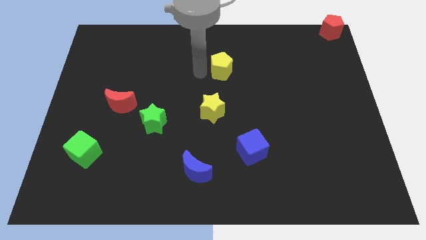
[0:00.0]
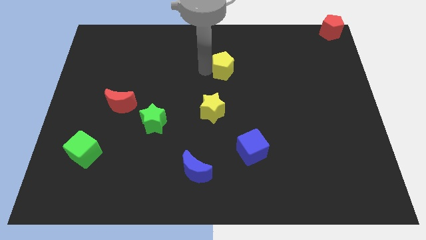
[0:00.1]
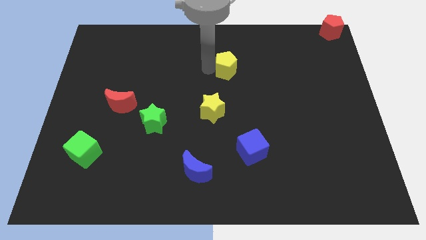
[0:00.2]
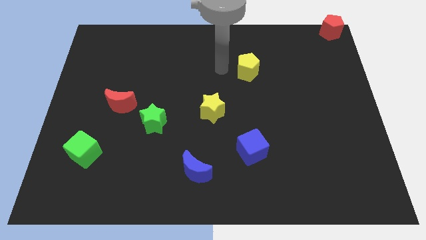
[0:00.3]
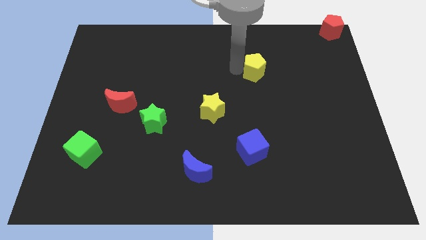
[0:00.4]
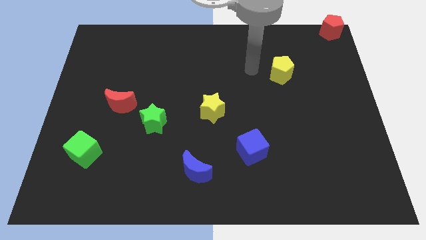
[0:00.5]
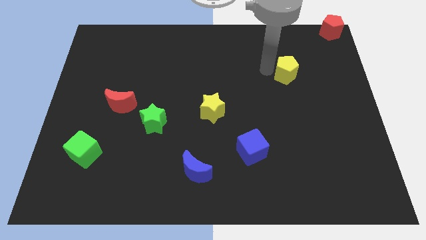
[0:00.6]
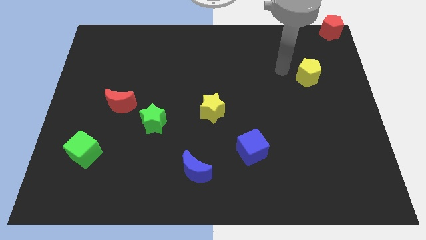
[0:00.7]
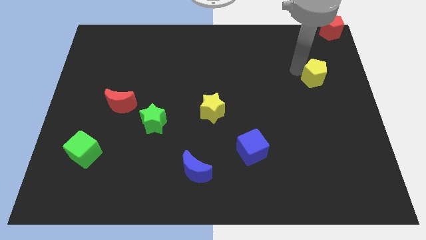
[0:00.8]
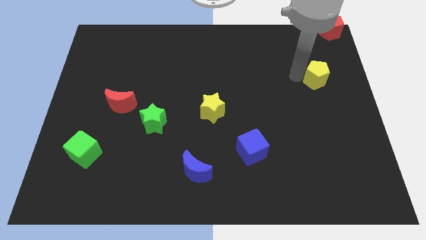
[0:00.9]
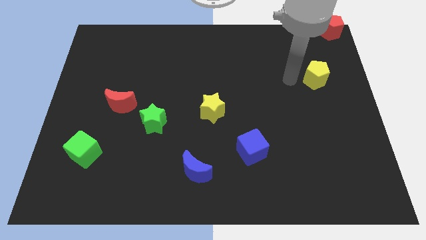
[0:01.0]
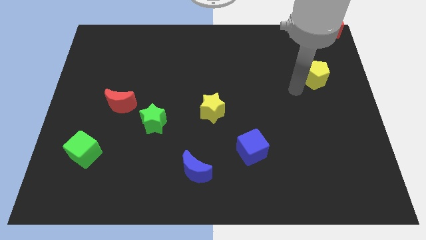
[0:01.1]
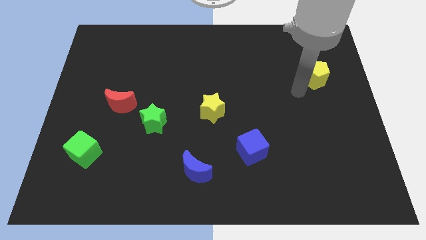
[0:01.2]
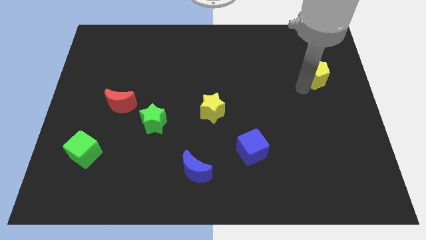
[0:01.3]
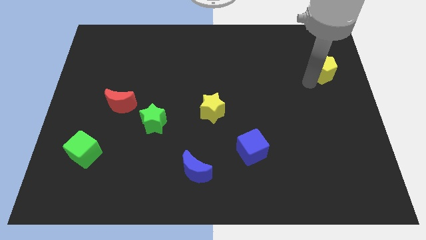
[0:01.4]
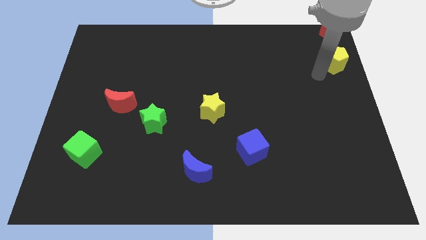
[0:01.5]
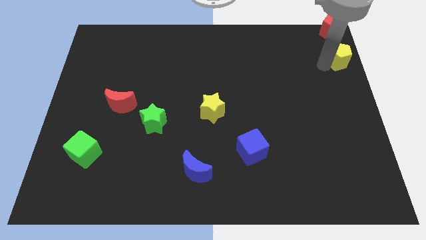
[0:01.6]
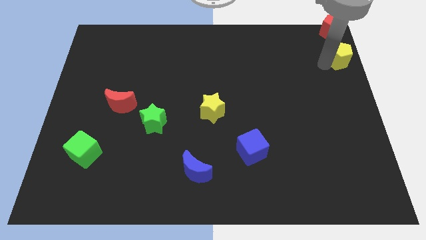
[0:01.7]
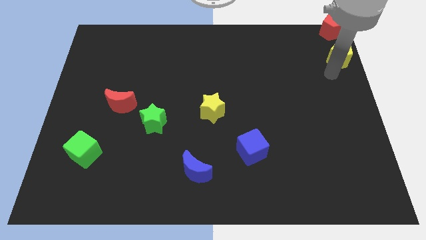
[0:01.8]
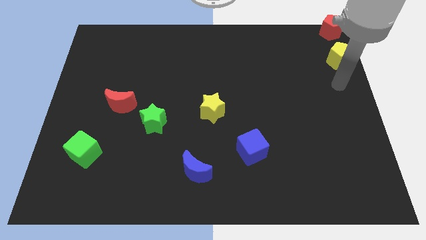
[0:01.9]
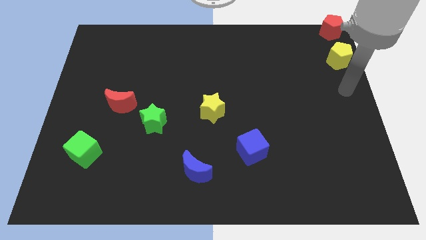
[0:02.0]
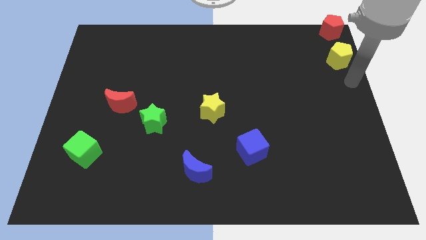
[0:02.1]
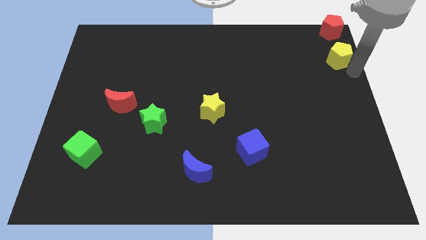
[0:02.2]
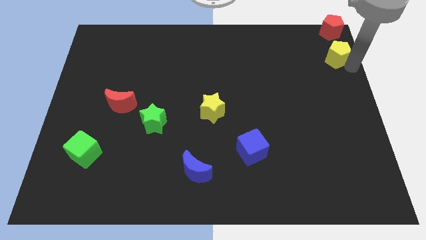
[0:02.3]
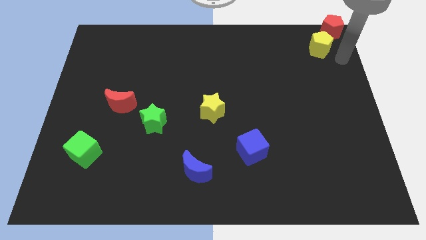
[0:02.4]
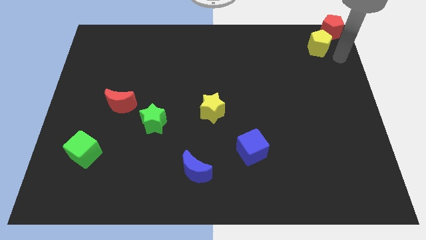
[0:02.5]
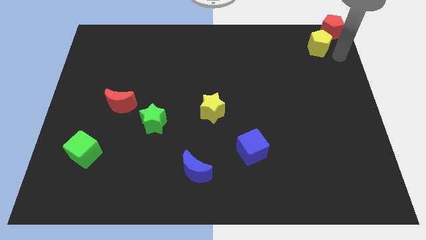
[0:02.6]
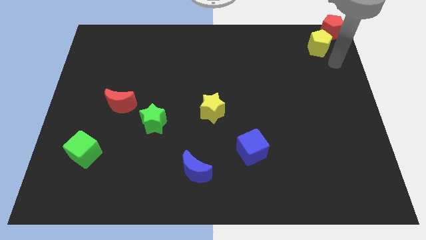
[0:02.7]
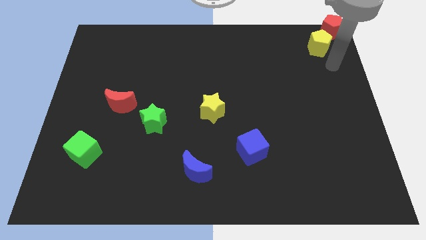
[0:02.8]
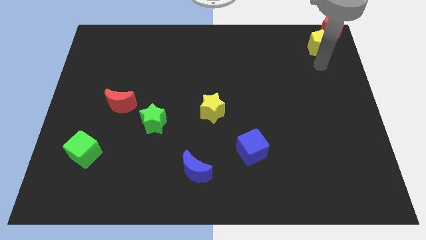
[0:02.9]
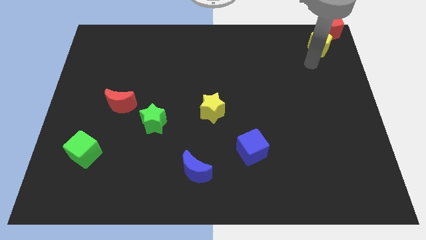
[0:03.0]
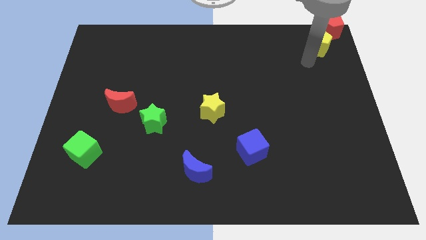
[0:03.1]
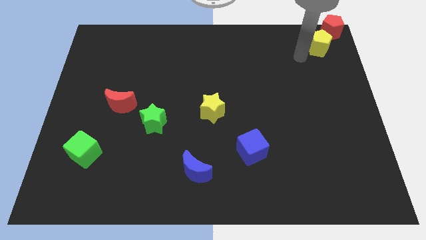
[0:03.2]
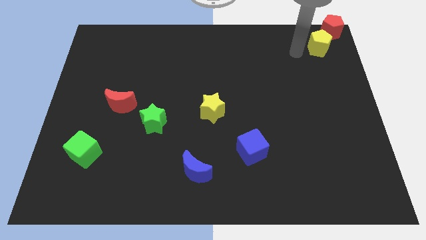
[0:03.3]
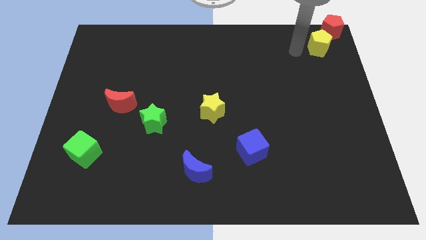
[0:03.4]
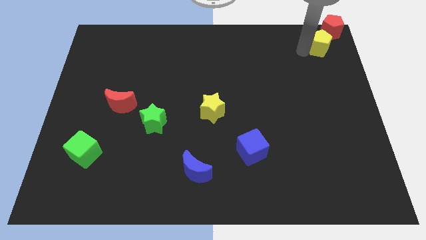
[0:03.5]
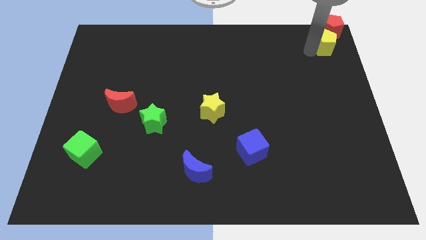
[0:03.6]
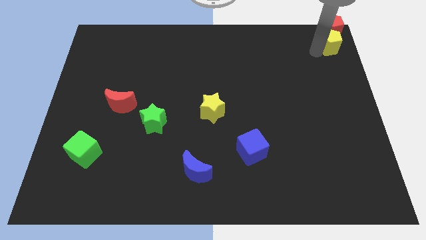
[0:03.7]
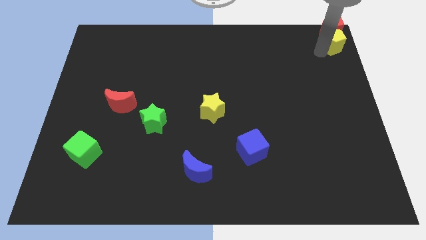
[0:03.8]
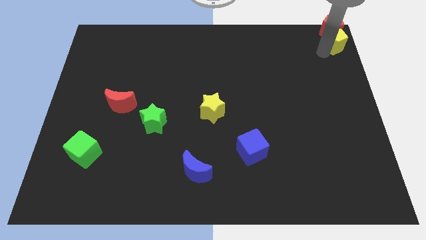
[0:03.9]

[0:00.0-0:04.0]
place the yellow pentagon close to the red pentagon

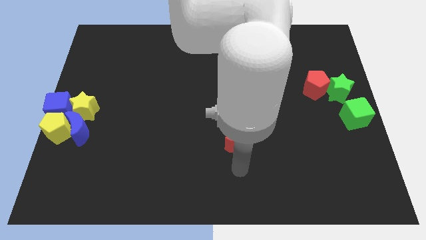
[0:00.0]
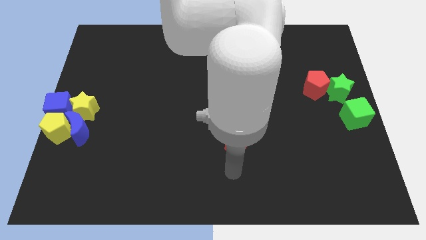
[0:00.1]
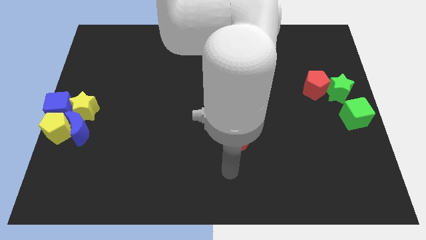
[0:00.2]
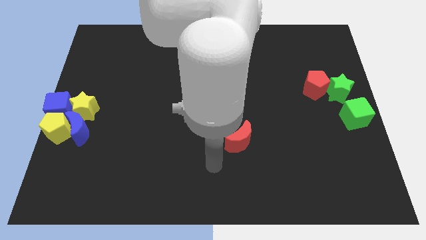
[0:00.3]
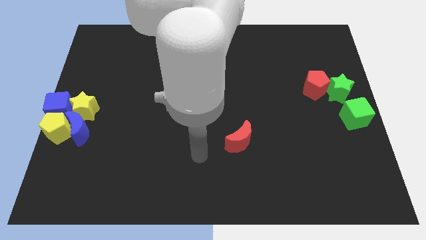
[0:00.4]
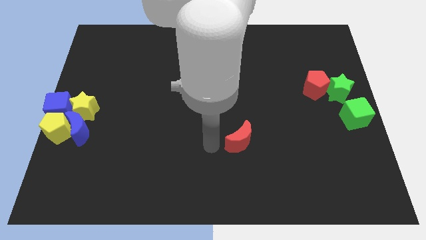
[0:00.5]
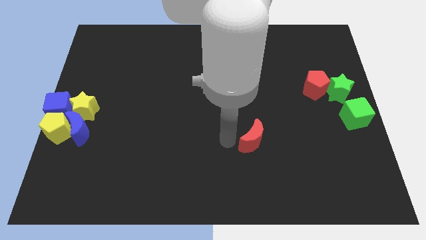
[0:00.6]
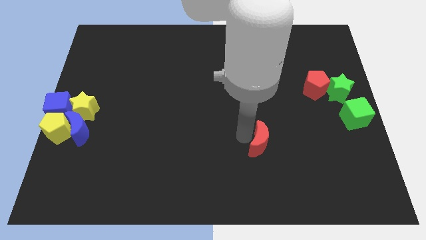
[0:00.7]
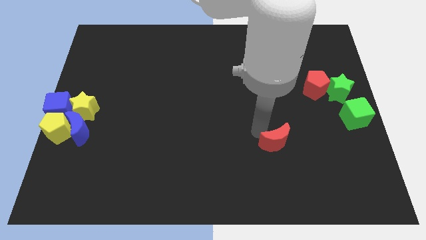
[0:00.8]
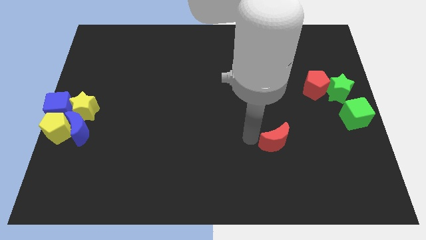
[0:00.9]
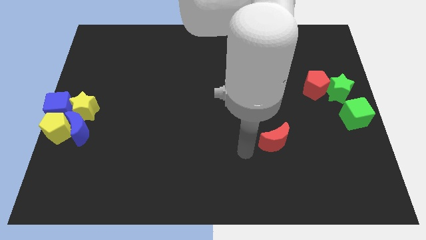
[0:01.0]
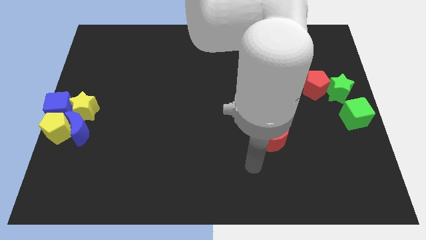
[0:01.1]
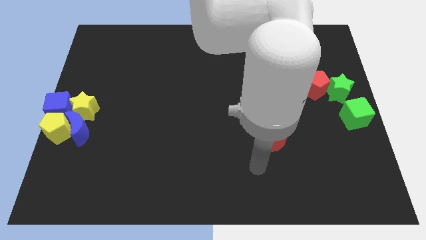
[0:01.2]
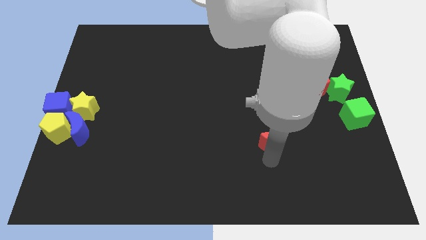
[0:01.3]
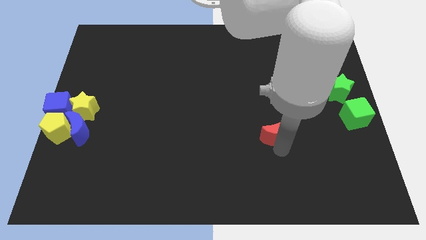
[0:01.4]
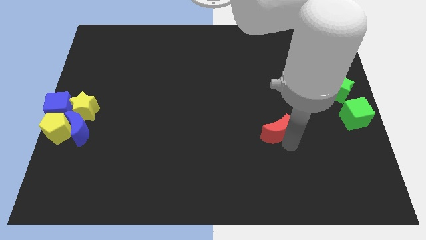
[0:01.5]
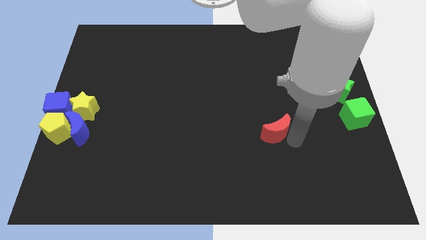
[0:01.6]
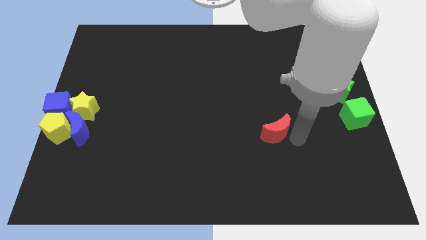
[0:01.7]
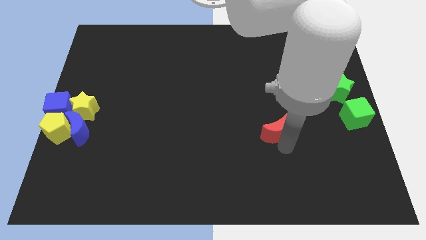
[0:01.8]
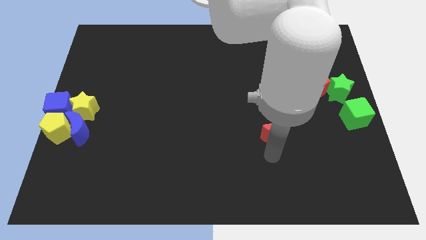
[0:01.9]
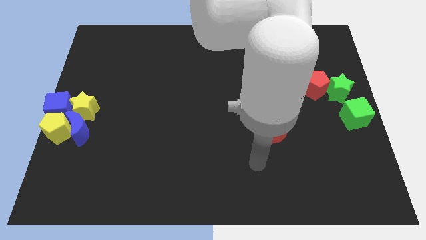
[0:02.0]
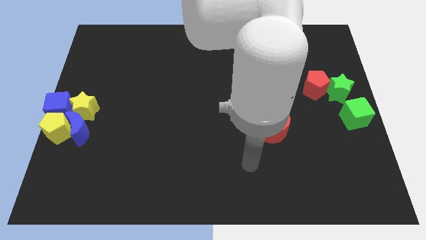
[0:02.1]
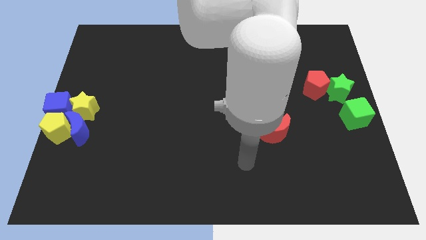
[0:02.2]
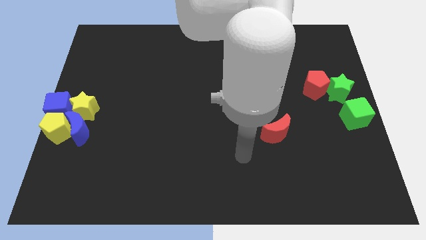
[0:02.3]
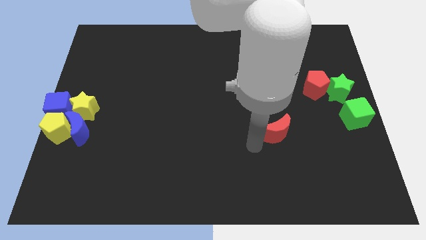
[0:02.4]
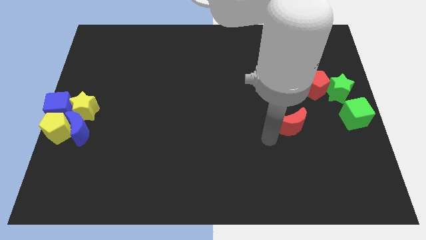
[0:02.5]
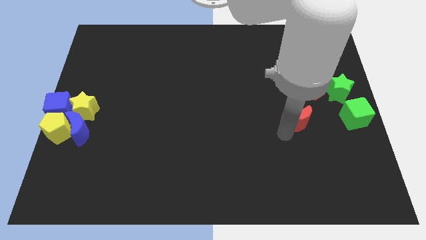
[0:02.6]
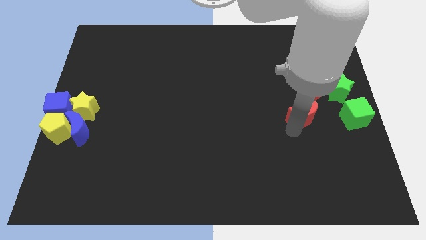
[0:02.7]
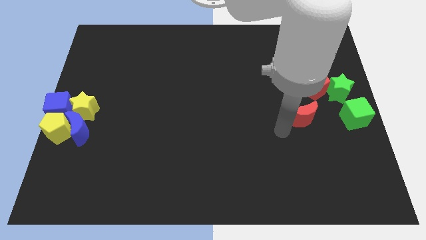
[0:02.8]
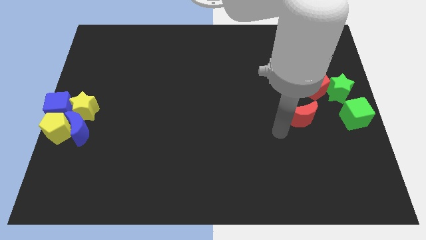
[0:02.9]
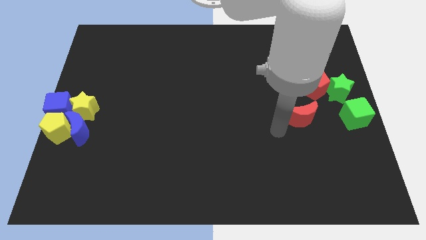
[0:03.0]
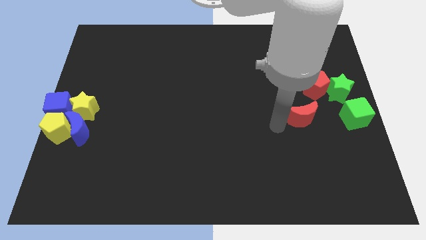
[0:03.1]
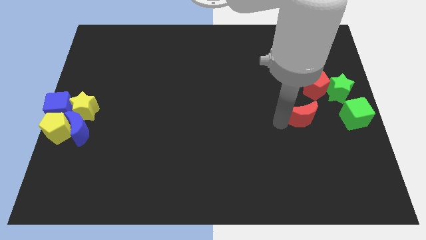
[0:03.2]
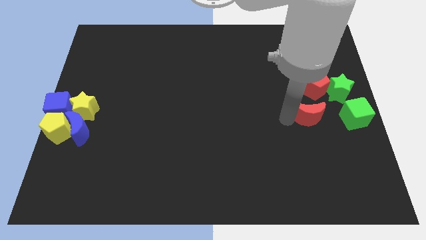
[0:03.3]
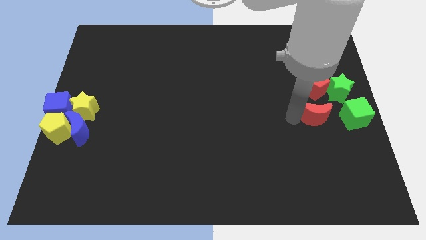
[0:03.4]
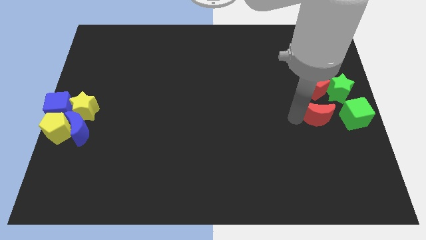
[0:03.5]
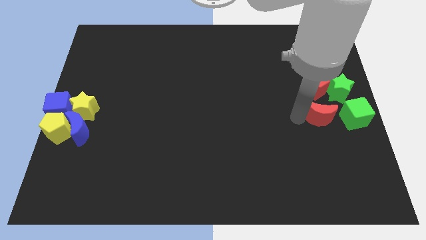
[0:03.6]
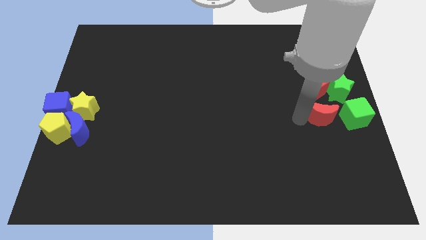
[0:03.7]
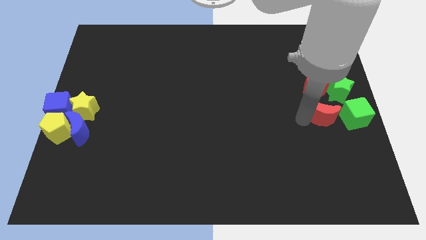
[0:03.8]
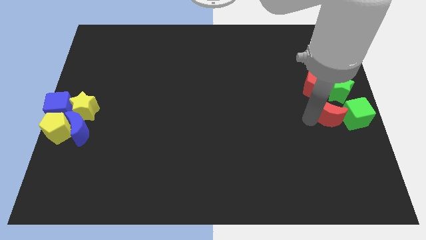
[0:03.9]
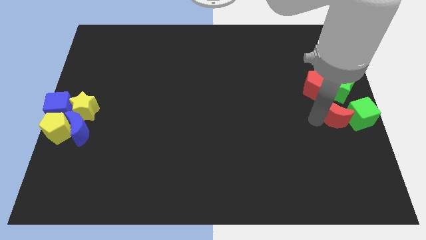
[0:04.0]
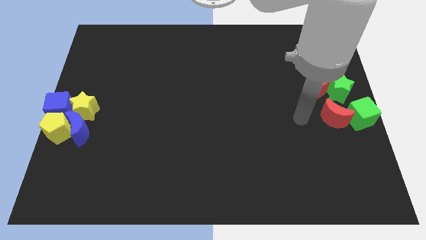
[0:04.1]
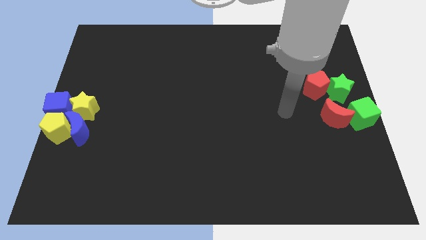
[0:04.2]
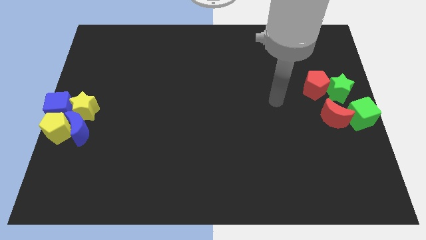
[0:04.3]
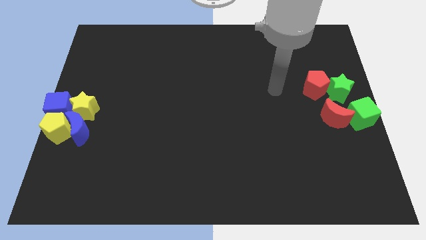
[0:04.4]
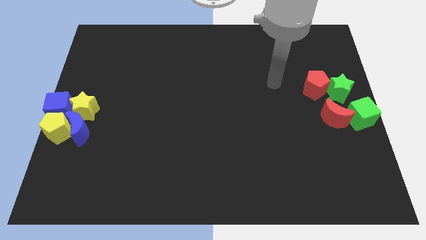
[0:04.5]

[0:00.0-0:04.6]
push the red crescent into the green cube

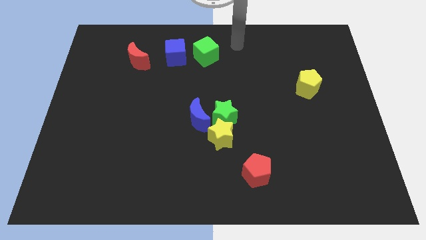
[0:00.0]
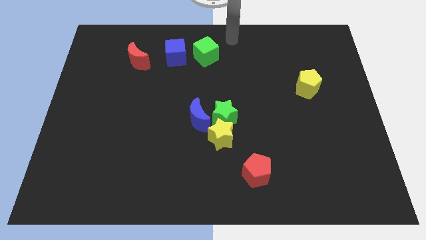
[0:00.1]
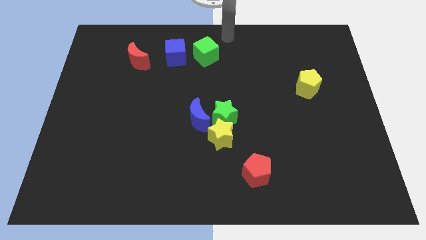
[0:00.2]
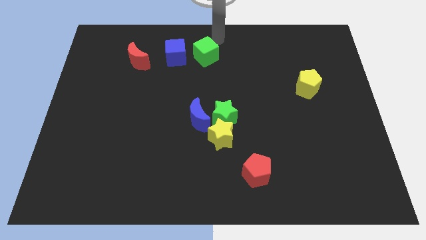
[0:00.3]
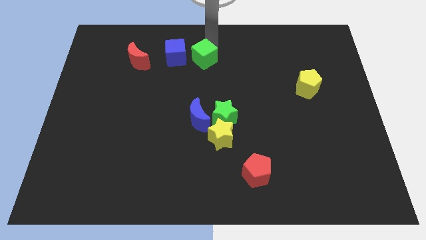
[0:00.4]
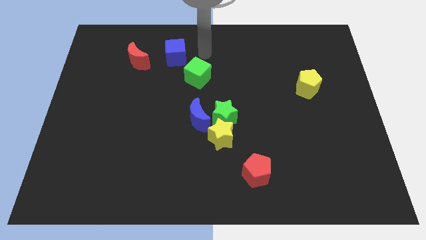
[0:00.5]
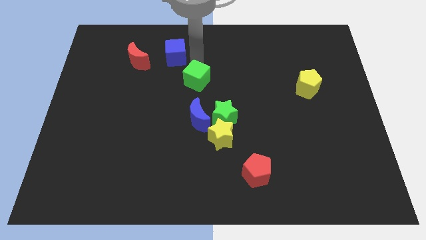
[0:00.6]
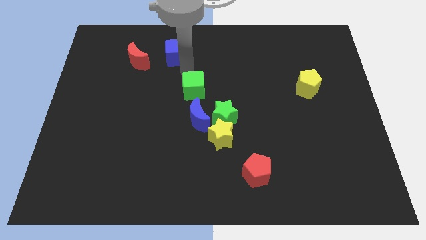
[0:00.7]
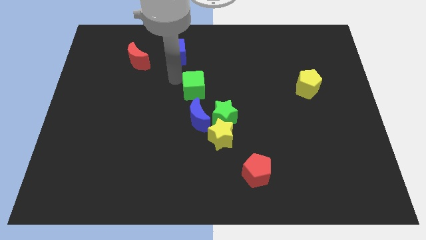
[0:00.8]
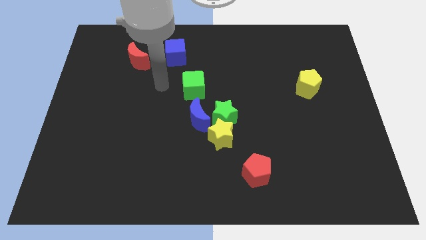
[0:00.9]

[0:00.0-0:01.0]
push the green cube towards the top side of the blue crescent
